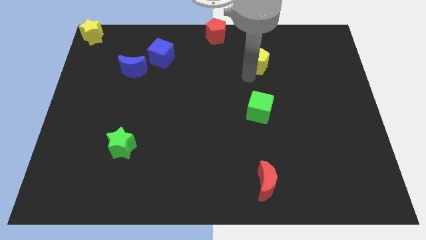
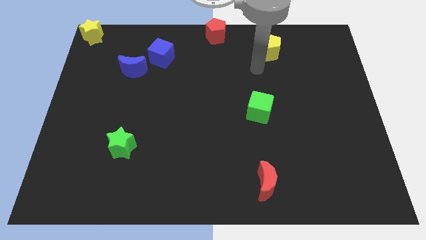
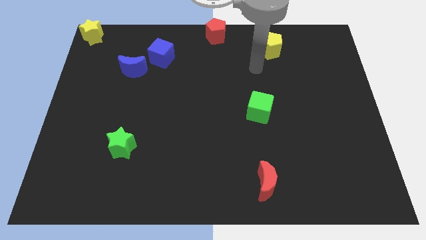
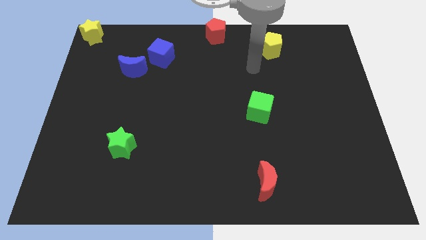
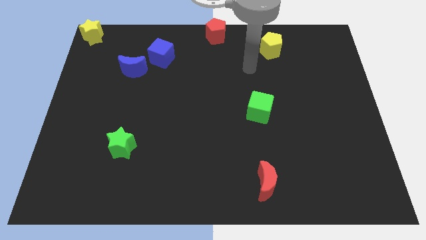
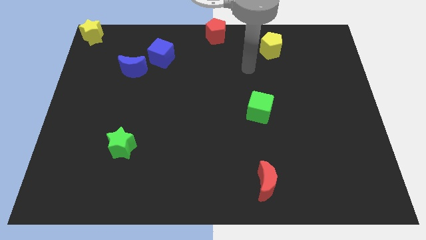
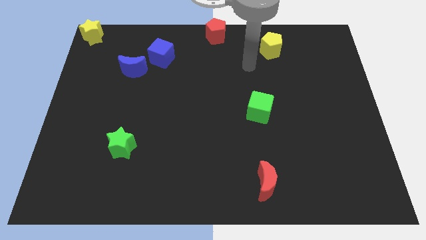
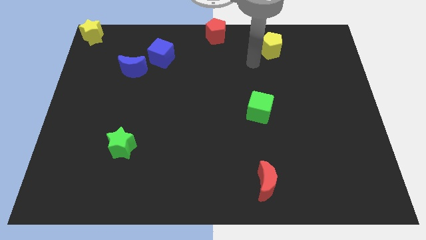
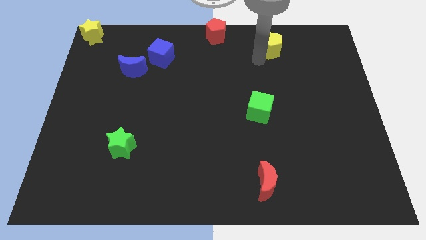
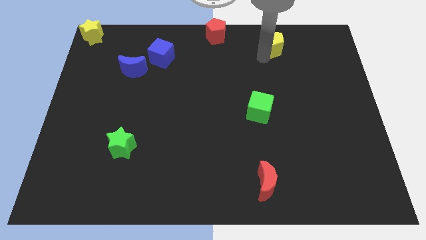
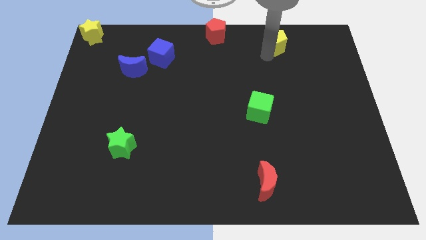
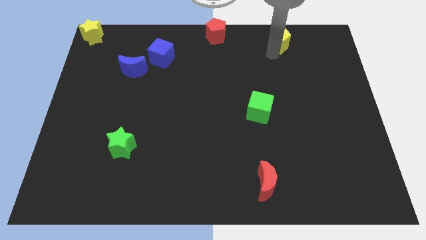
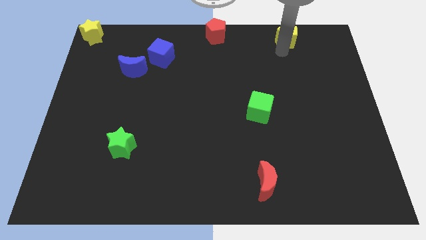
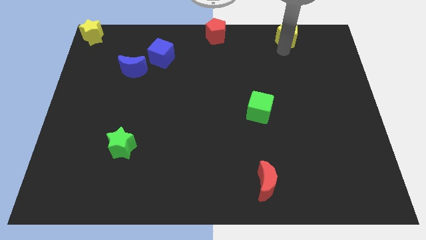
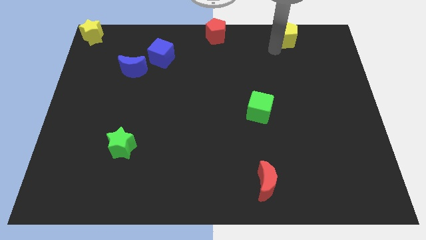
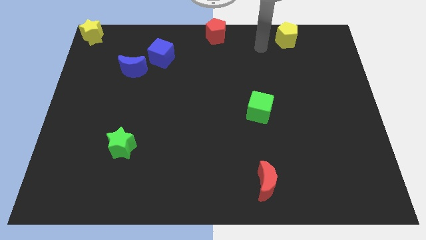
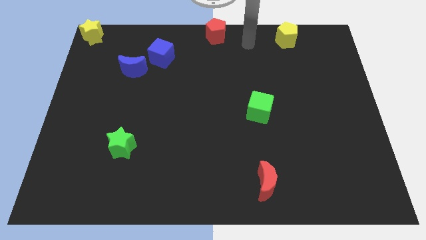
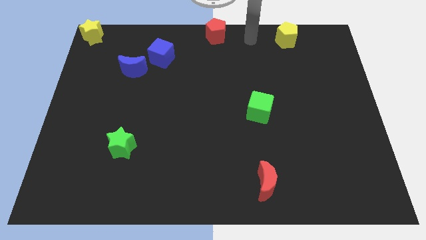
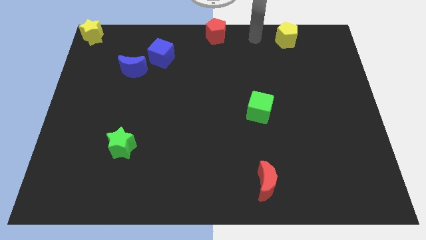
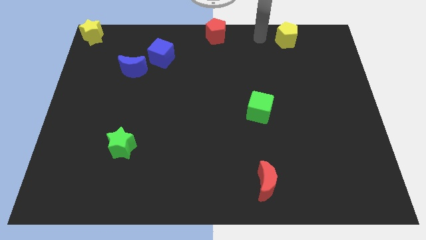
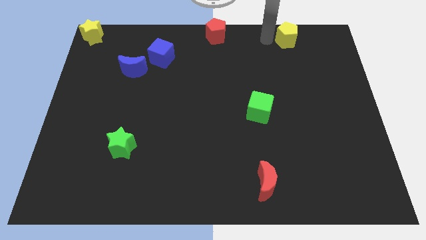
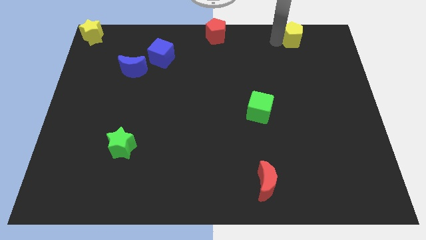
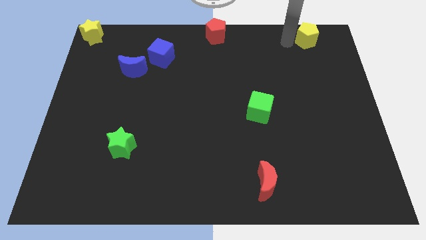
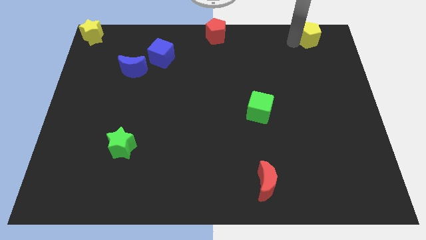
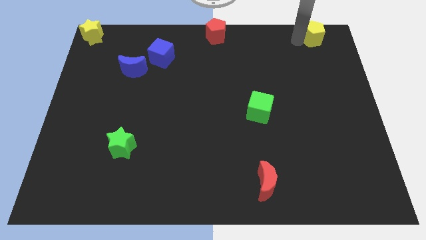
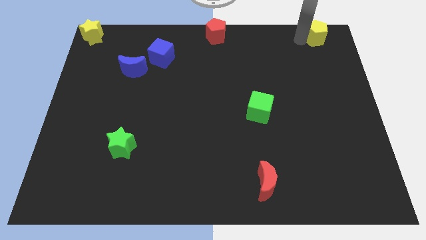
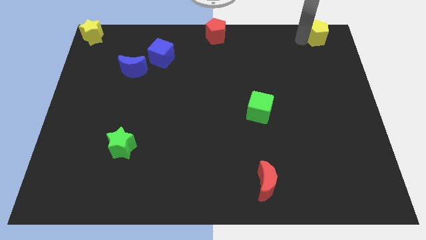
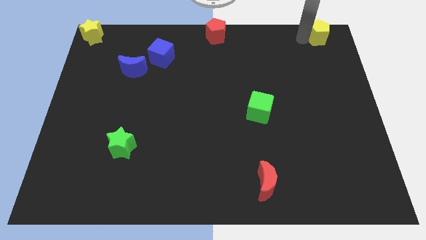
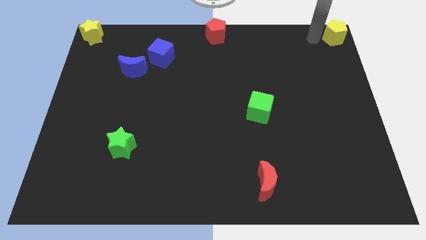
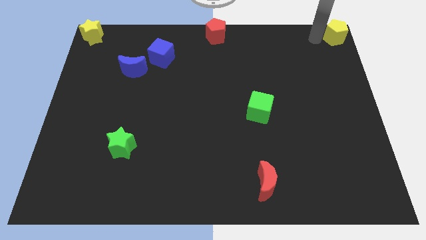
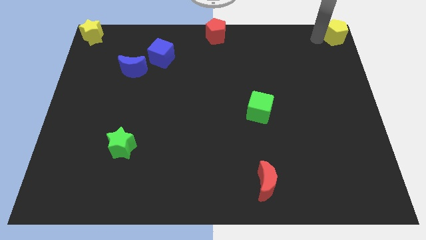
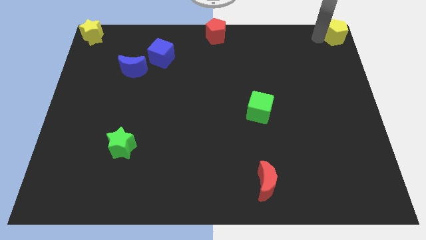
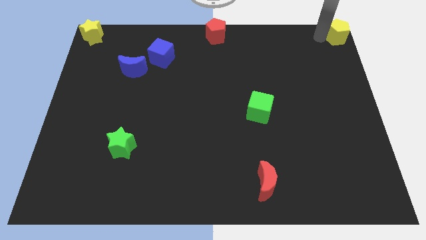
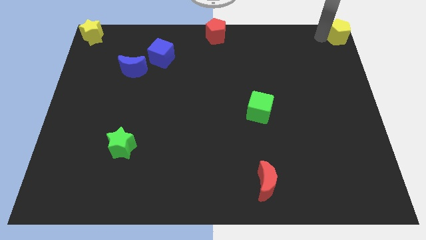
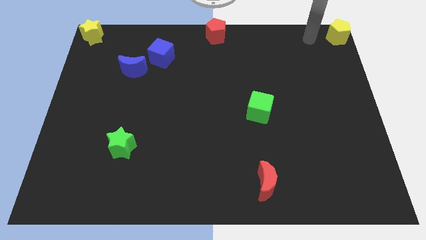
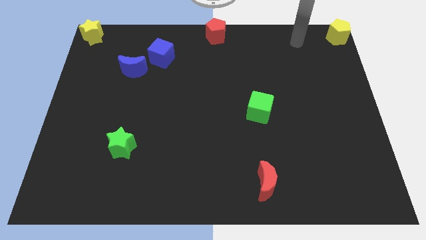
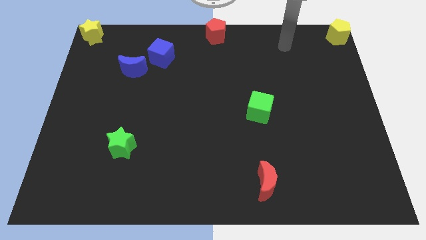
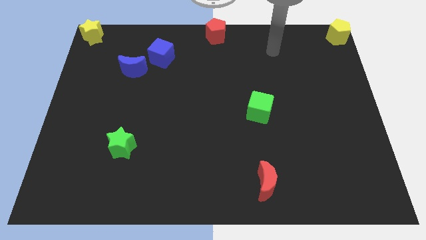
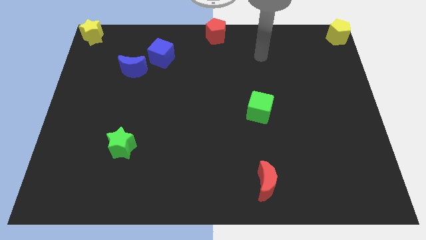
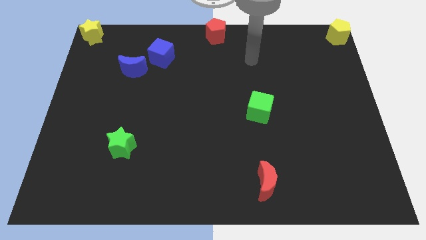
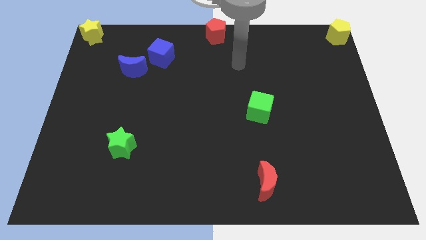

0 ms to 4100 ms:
put the yellow pentagon at the top right corner

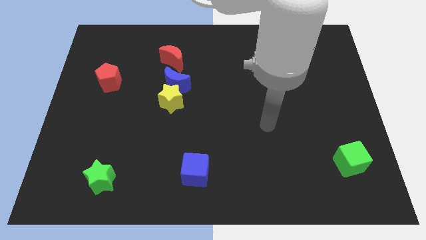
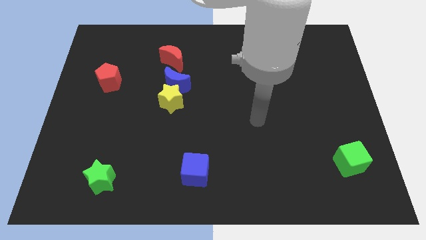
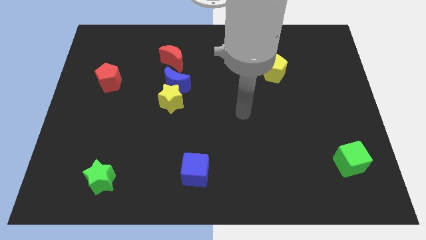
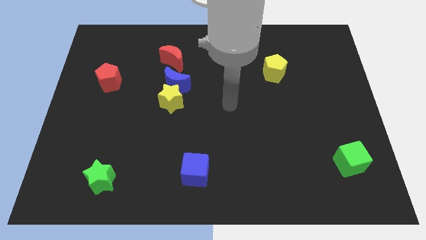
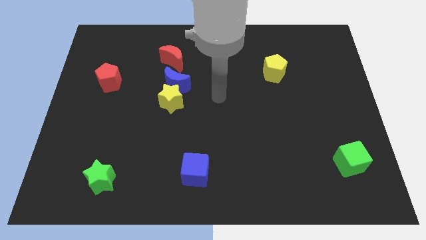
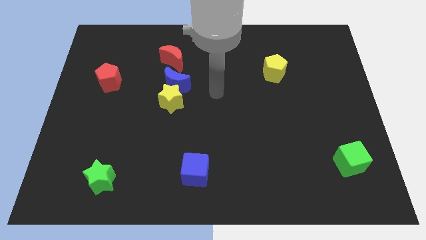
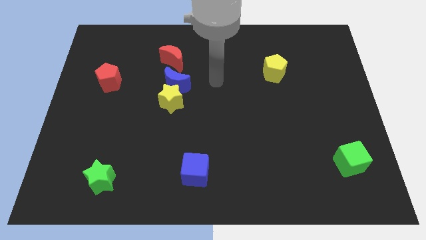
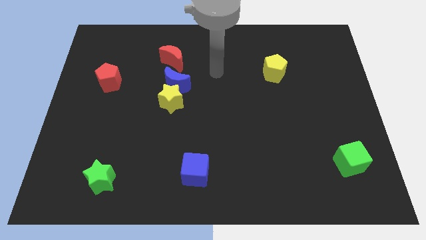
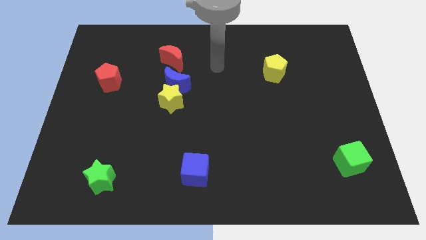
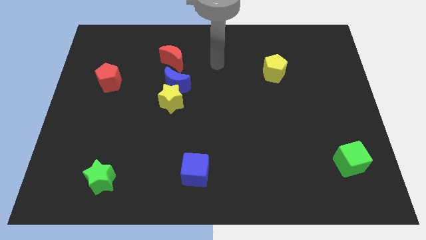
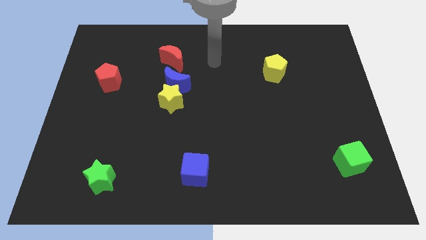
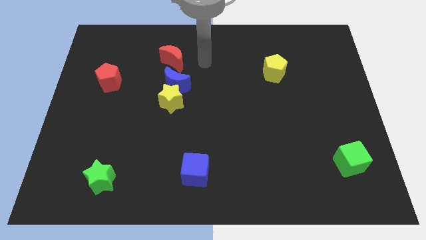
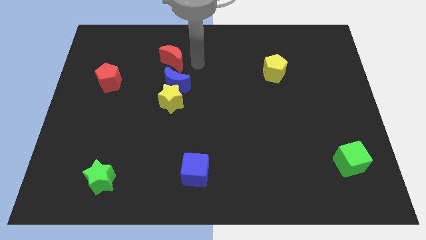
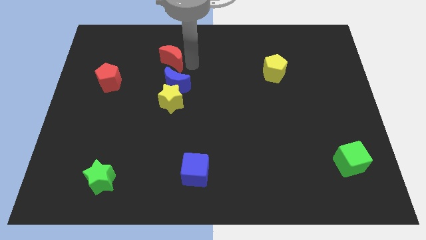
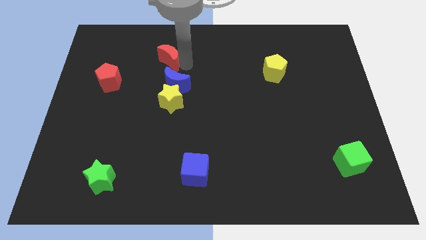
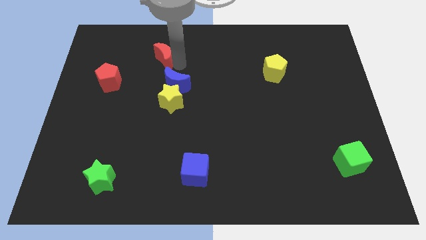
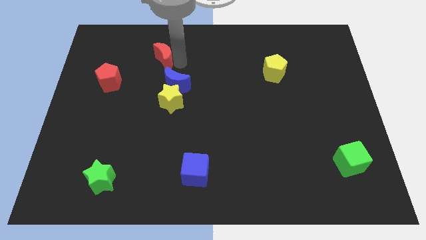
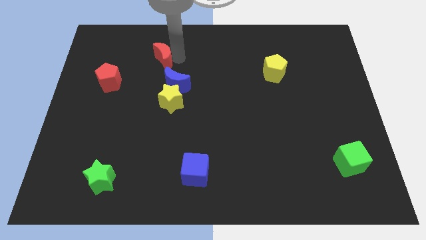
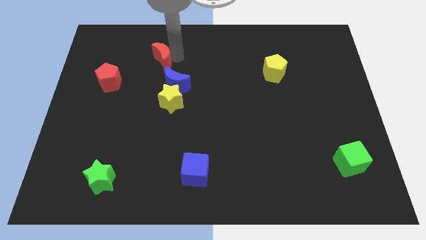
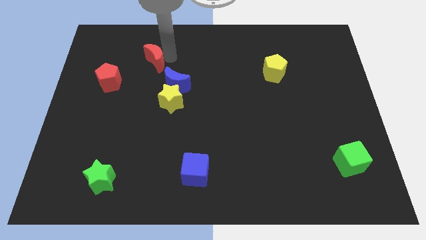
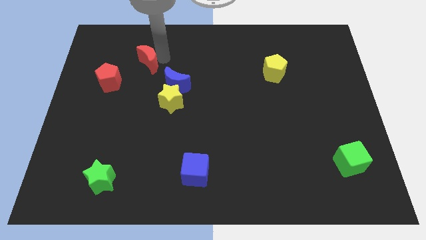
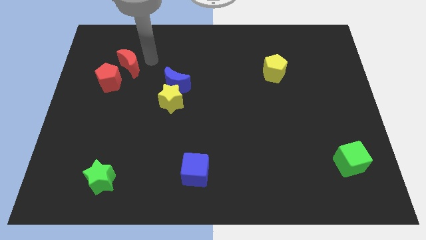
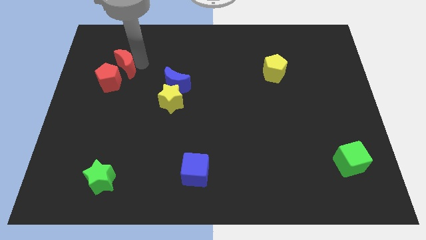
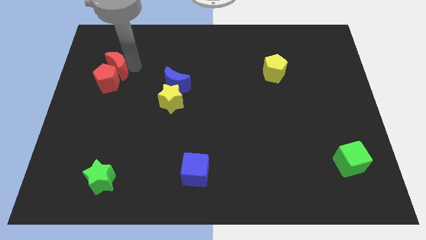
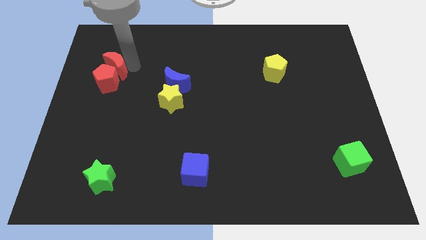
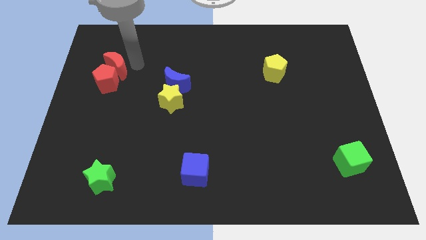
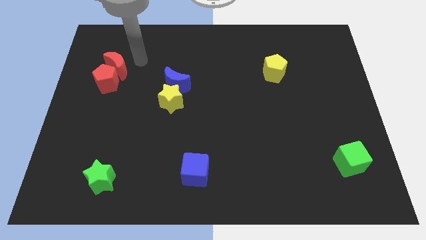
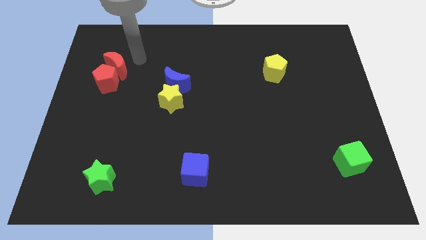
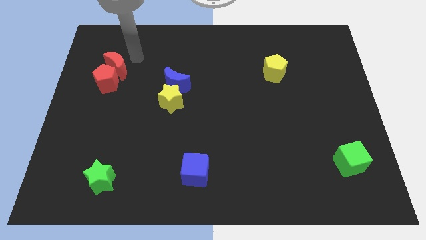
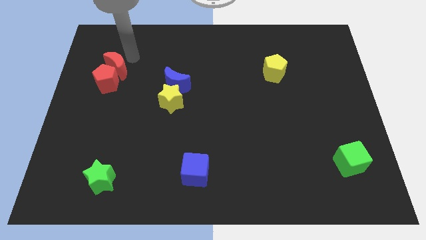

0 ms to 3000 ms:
push the red crescent to the top right of red pentagon

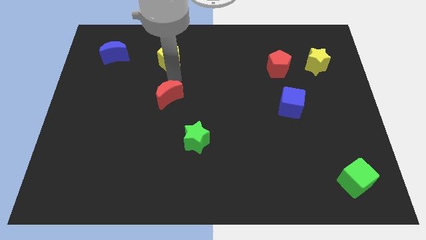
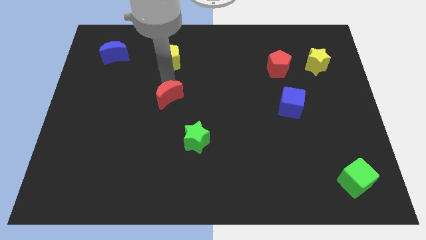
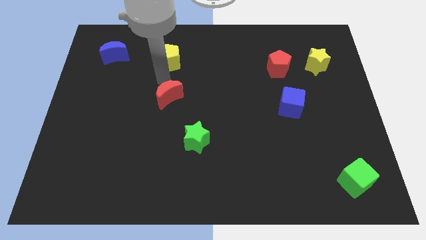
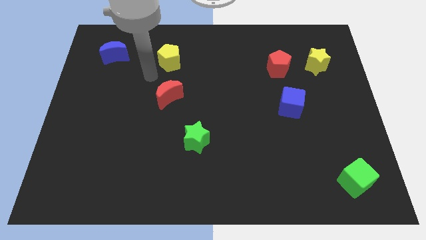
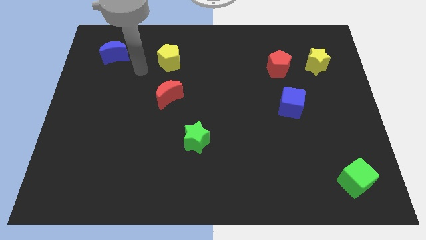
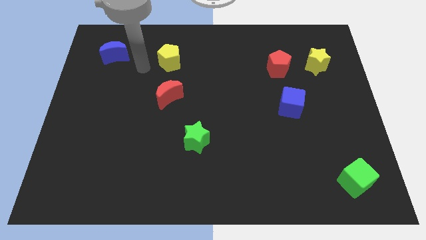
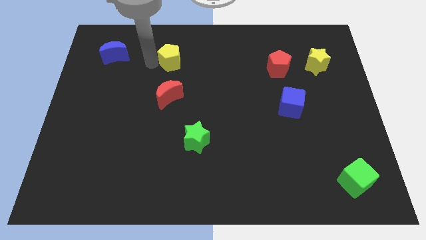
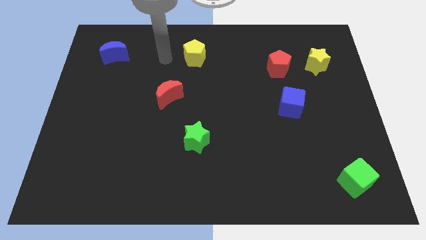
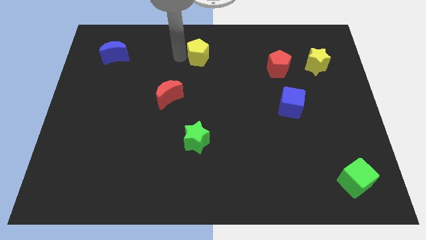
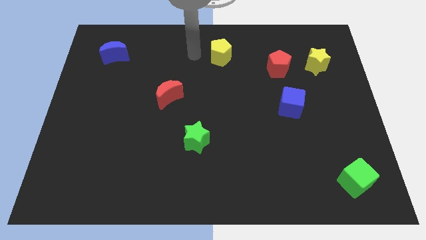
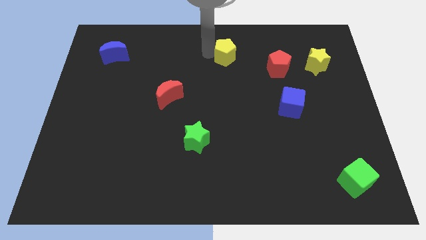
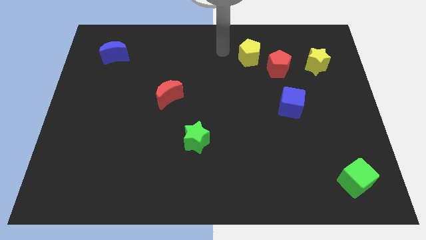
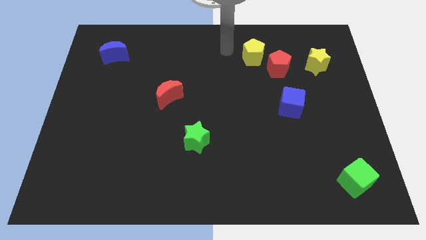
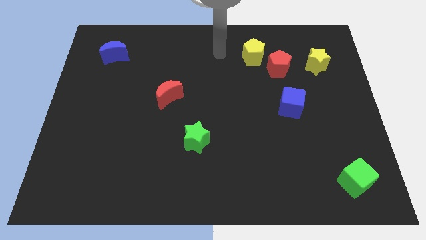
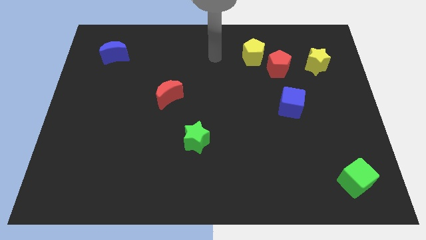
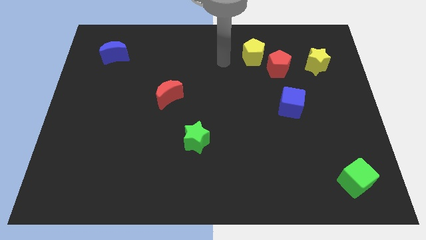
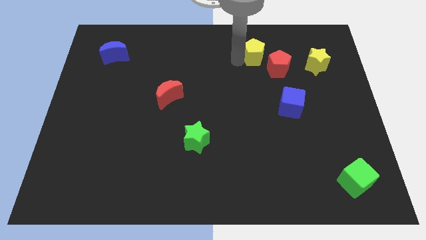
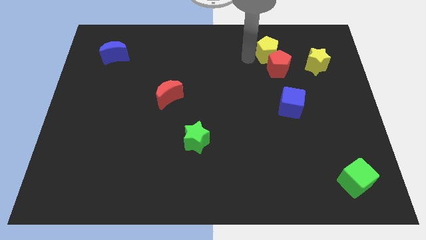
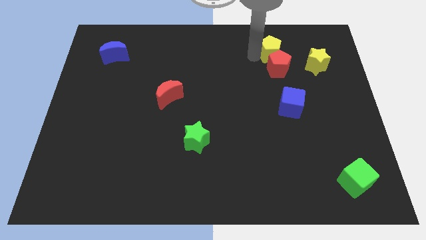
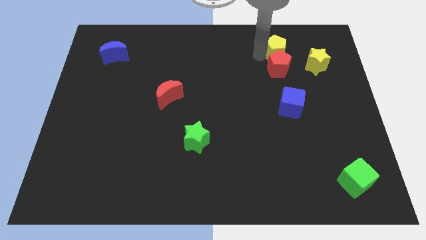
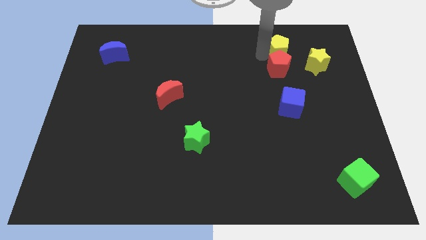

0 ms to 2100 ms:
place the yellow pentagon above the red pentagon
